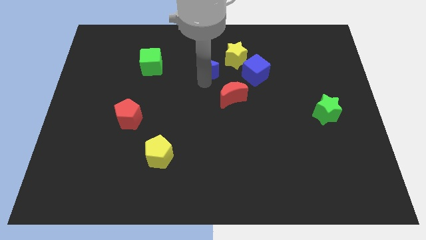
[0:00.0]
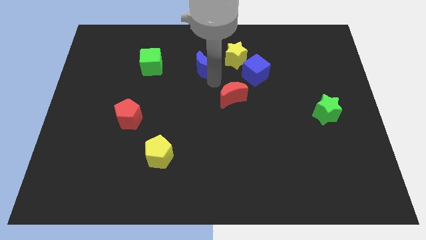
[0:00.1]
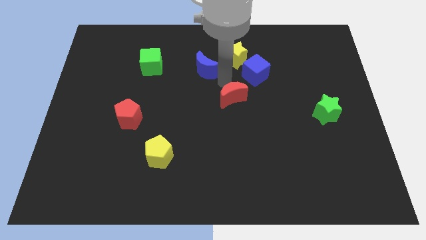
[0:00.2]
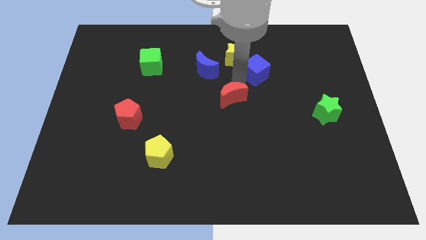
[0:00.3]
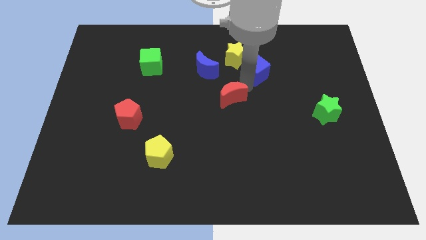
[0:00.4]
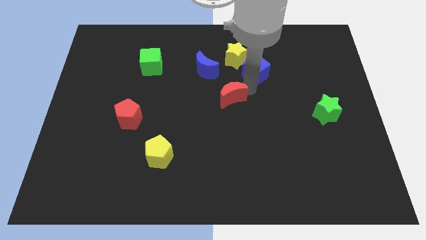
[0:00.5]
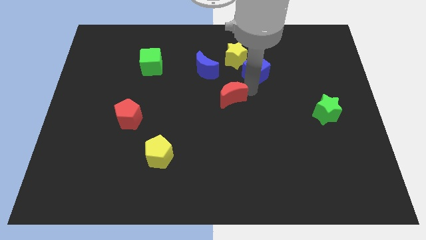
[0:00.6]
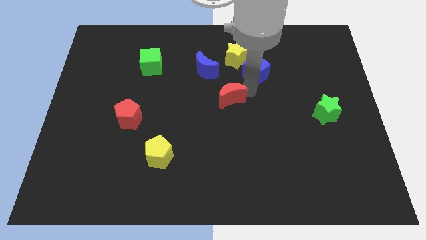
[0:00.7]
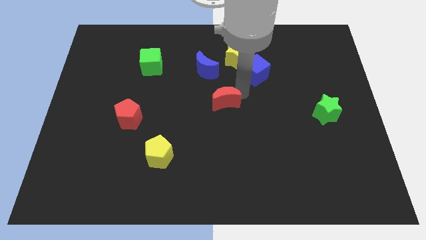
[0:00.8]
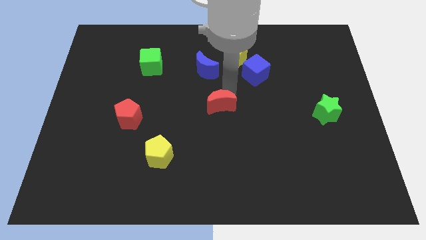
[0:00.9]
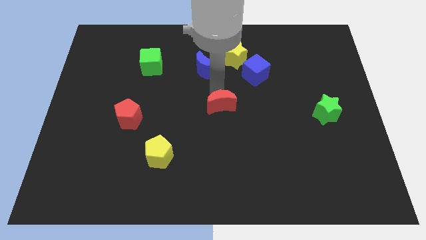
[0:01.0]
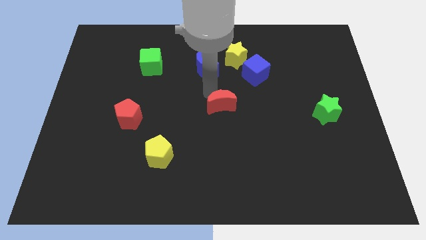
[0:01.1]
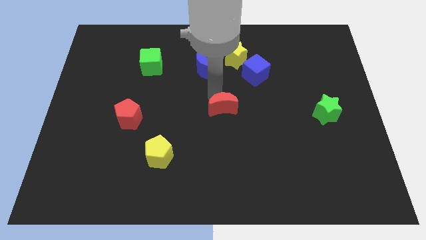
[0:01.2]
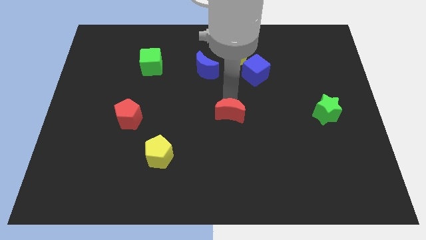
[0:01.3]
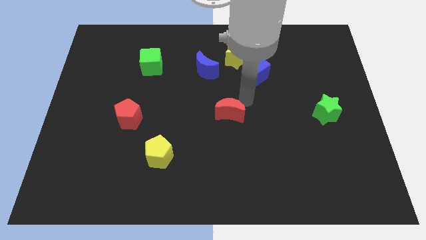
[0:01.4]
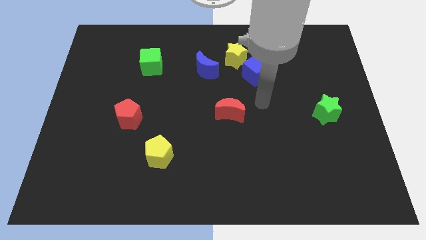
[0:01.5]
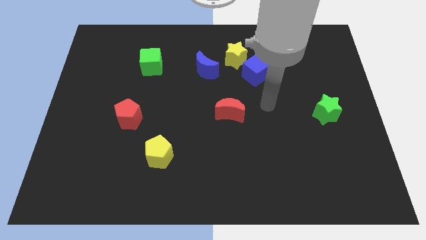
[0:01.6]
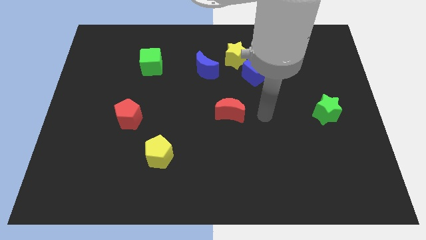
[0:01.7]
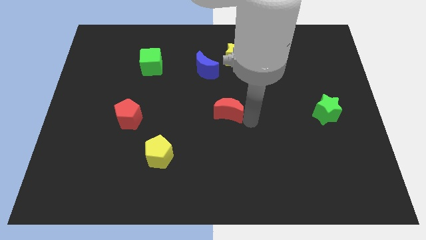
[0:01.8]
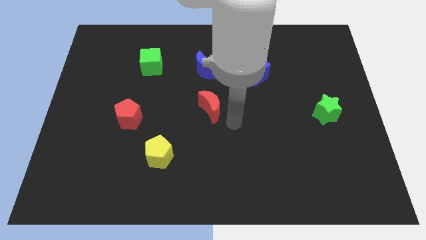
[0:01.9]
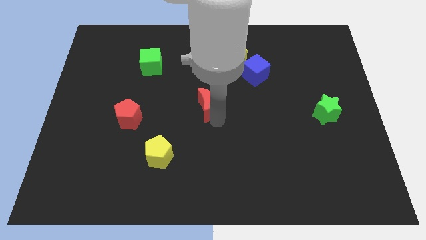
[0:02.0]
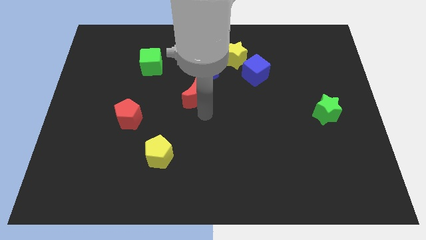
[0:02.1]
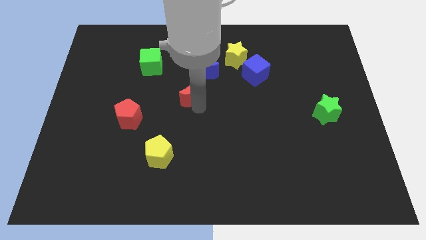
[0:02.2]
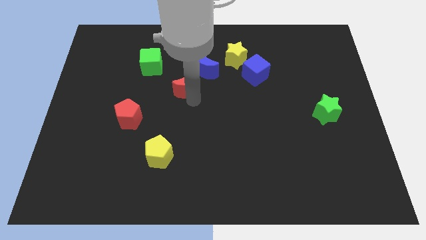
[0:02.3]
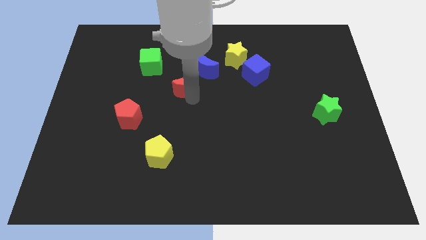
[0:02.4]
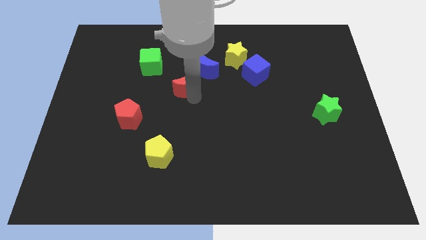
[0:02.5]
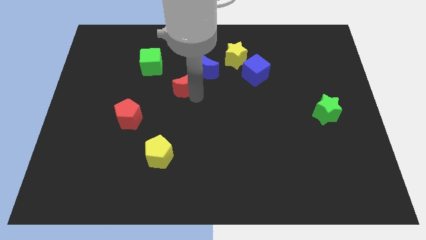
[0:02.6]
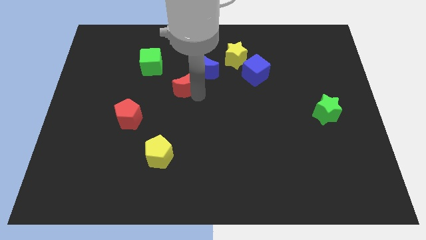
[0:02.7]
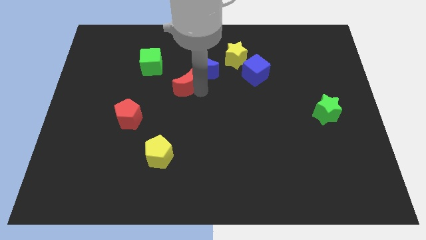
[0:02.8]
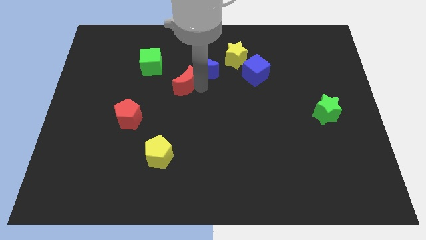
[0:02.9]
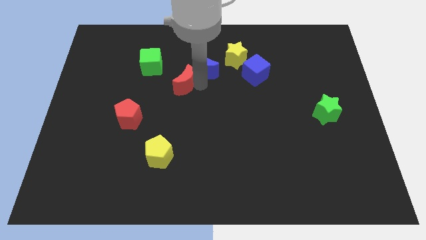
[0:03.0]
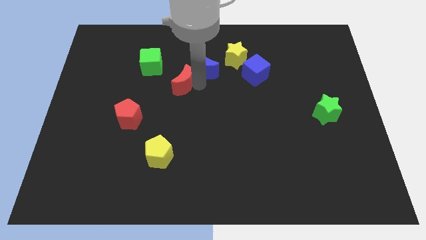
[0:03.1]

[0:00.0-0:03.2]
place red moon to the bottom left of blue moon

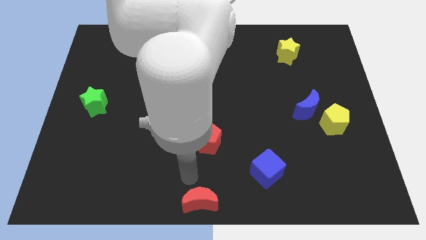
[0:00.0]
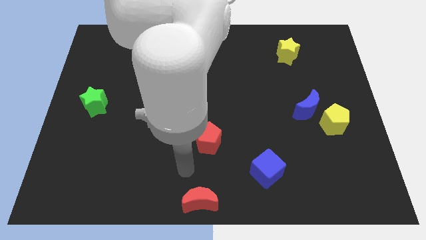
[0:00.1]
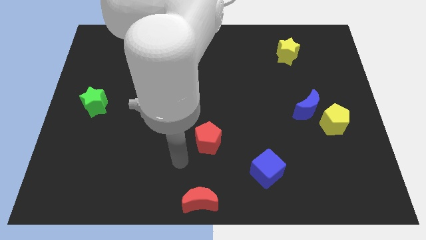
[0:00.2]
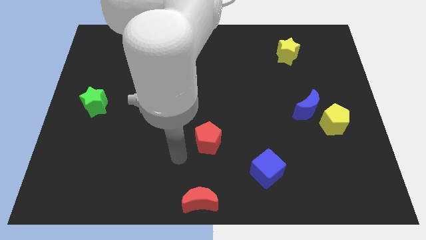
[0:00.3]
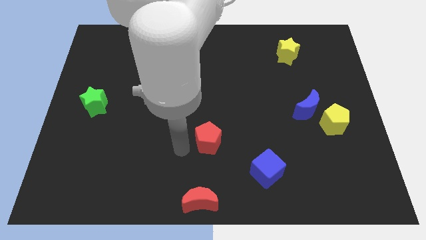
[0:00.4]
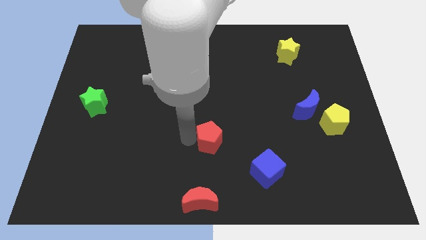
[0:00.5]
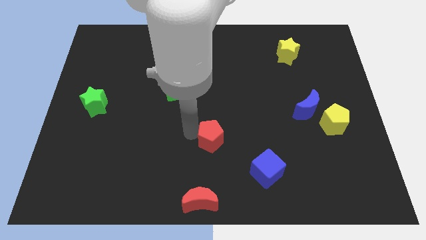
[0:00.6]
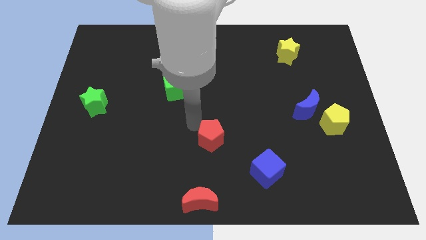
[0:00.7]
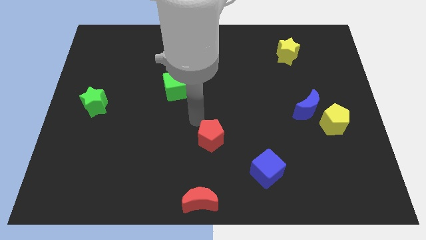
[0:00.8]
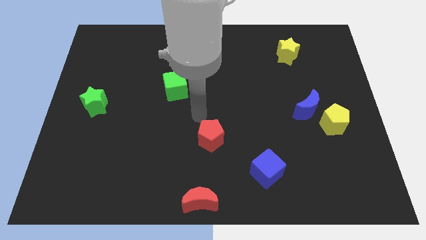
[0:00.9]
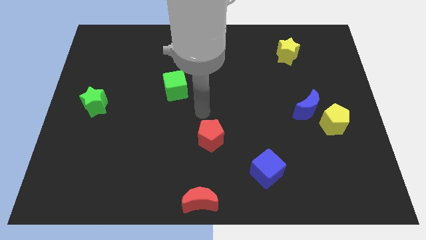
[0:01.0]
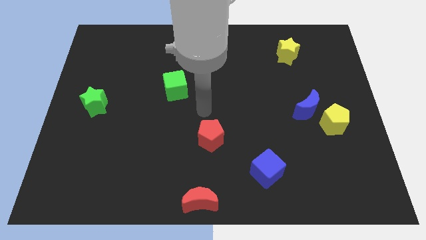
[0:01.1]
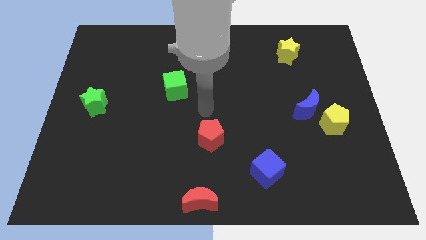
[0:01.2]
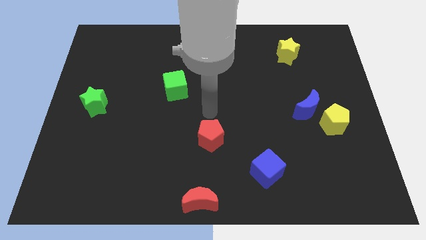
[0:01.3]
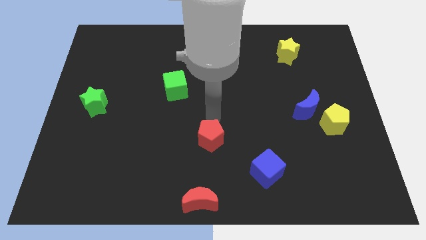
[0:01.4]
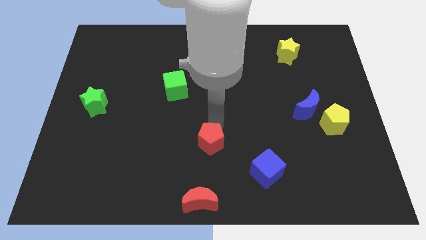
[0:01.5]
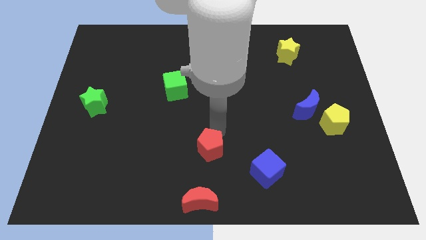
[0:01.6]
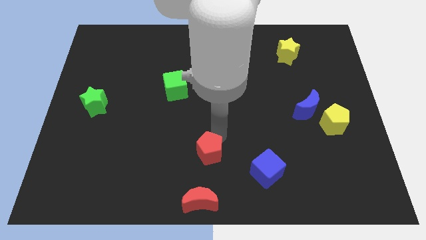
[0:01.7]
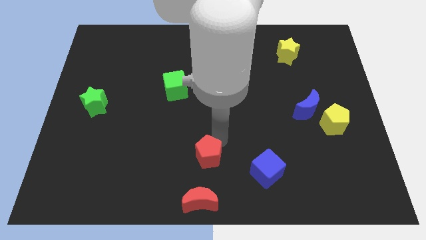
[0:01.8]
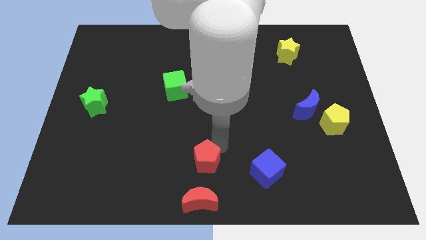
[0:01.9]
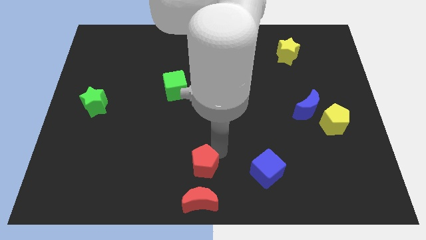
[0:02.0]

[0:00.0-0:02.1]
move the red pentagon towards red crescent

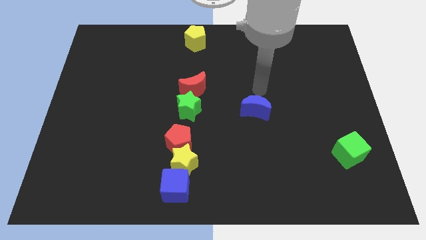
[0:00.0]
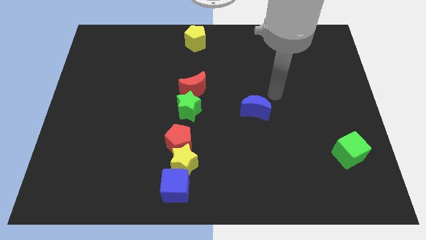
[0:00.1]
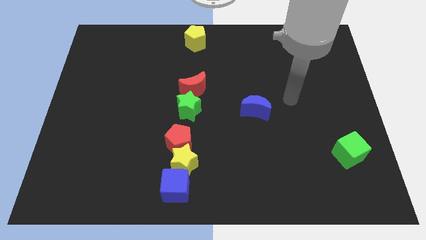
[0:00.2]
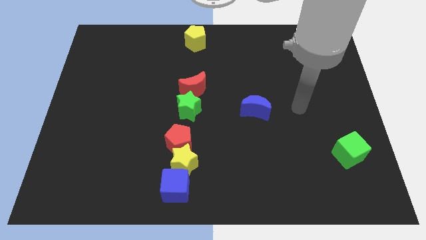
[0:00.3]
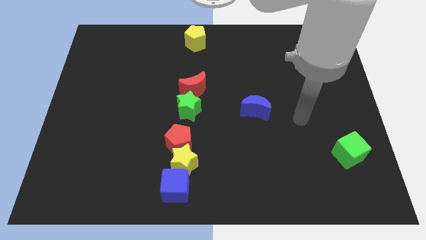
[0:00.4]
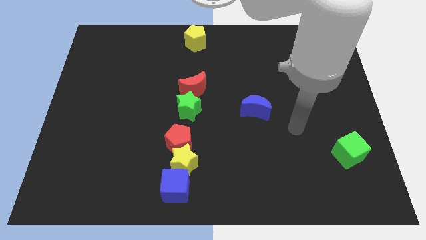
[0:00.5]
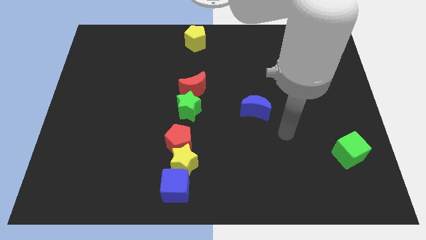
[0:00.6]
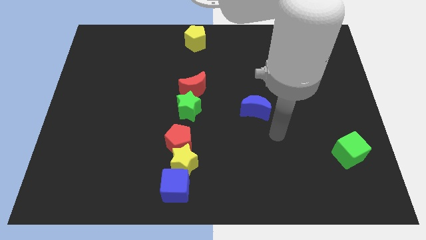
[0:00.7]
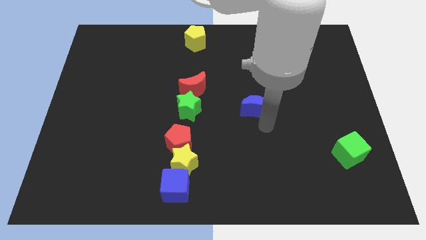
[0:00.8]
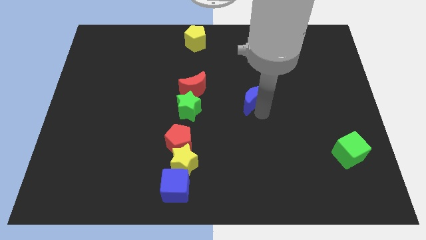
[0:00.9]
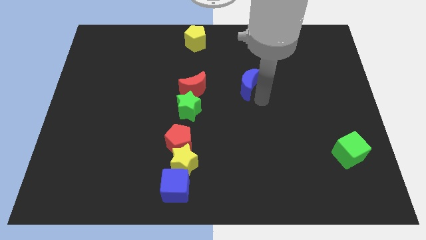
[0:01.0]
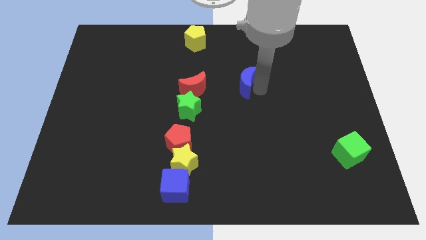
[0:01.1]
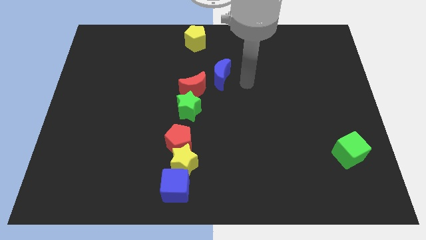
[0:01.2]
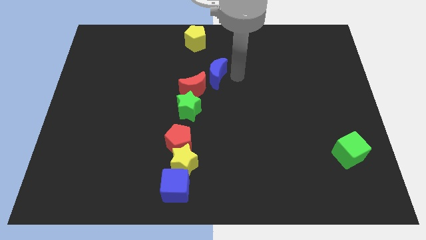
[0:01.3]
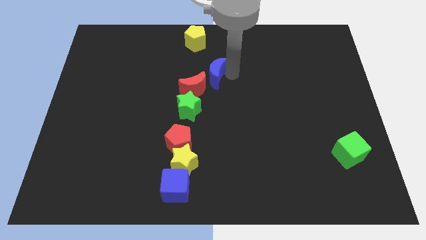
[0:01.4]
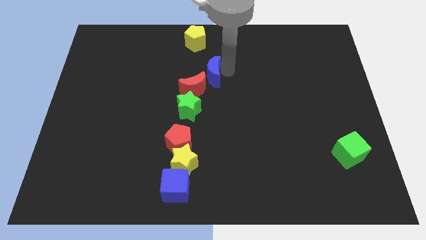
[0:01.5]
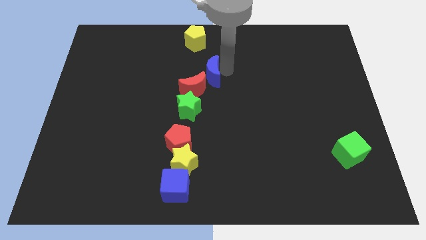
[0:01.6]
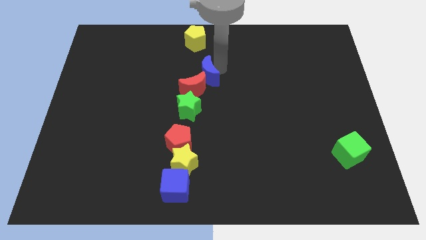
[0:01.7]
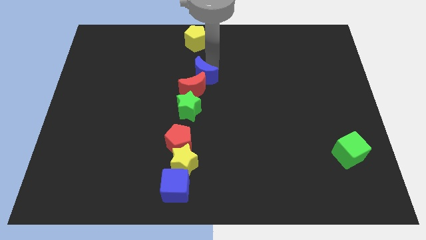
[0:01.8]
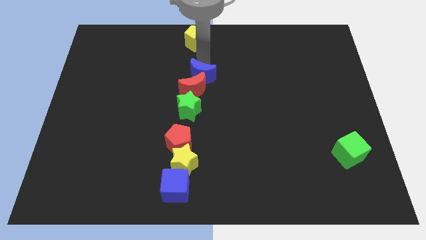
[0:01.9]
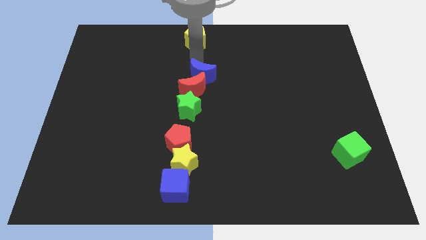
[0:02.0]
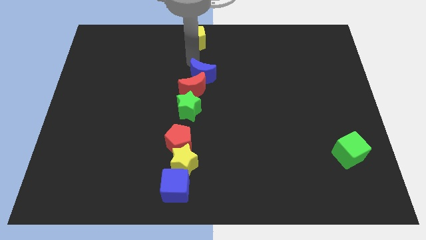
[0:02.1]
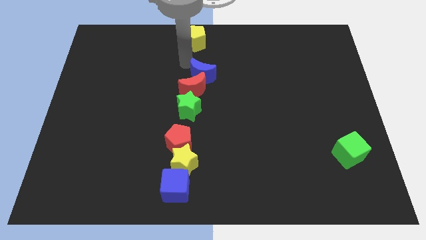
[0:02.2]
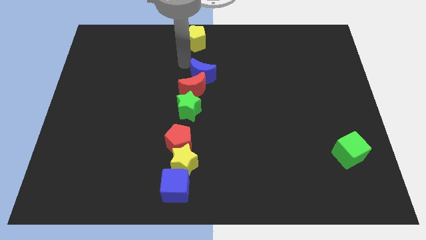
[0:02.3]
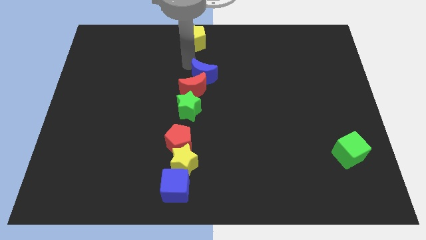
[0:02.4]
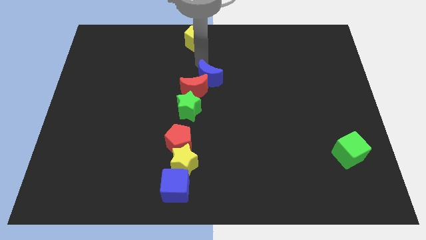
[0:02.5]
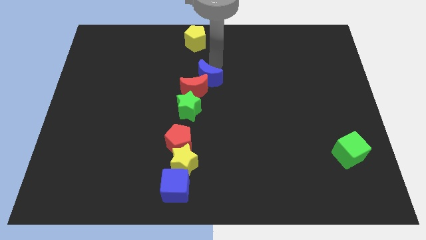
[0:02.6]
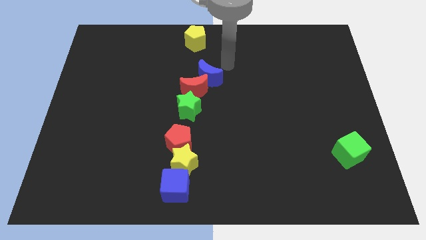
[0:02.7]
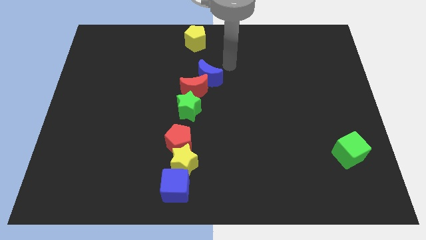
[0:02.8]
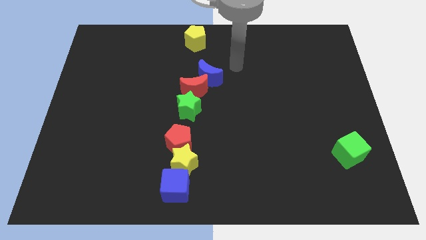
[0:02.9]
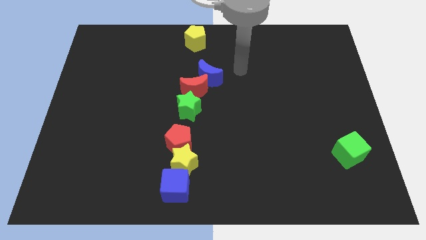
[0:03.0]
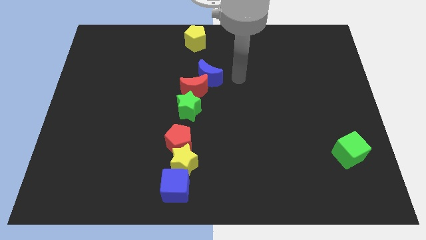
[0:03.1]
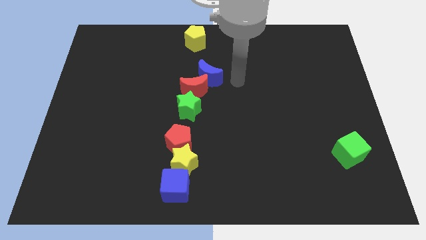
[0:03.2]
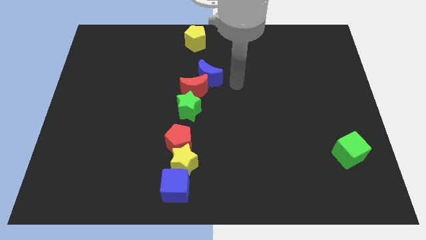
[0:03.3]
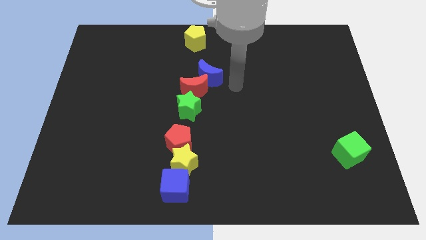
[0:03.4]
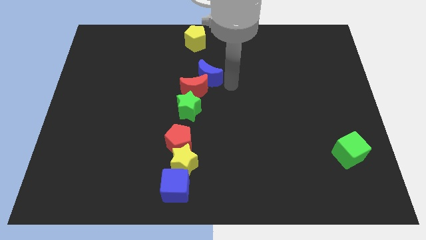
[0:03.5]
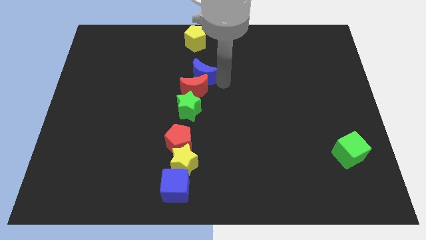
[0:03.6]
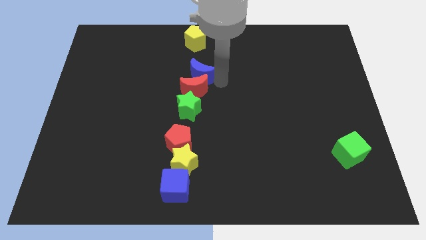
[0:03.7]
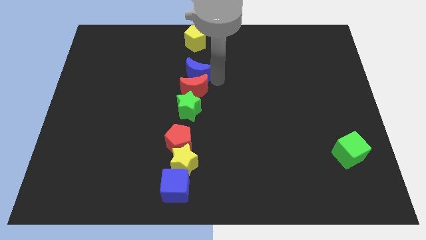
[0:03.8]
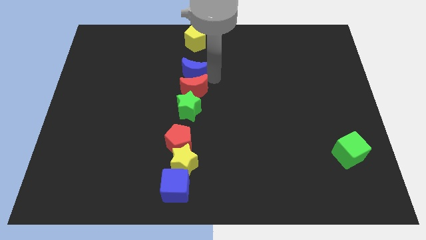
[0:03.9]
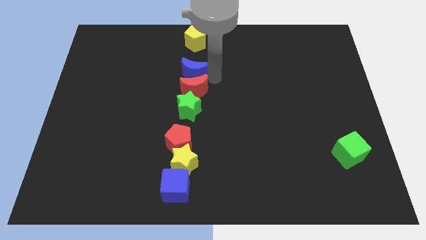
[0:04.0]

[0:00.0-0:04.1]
move blue crescent below to the yellow pentagon
